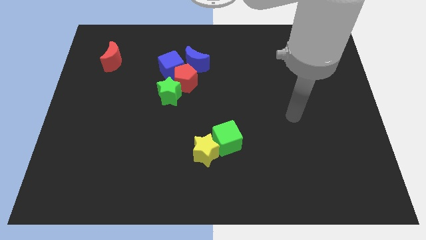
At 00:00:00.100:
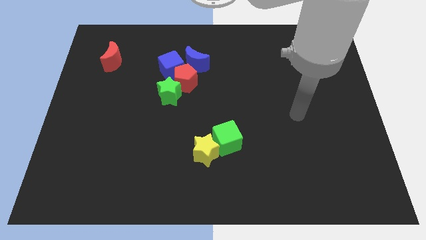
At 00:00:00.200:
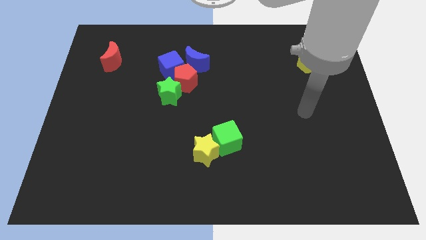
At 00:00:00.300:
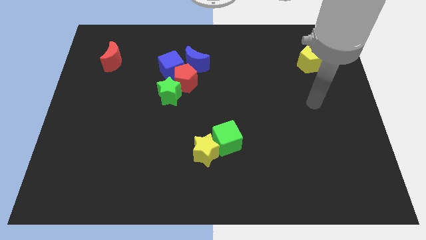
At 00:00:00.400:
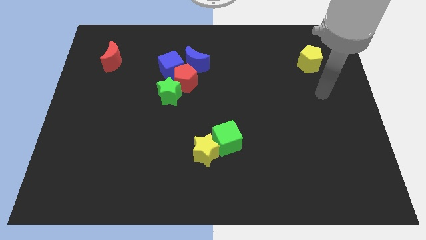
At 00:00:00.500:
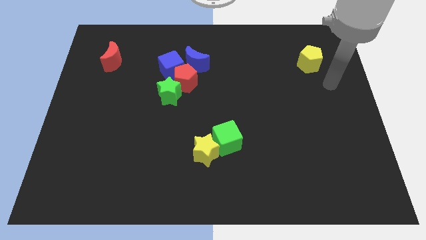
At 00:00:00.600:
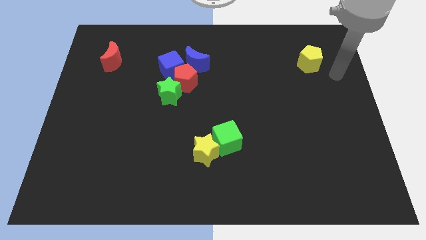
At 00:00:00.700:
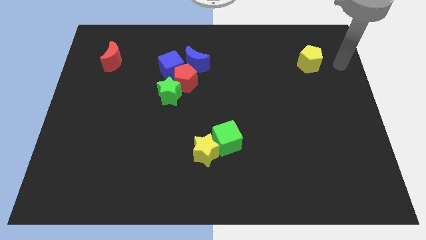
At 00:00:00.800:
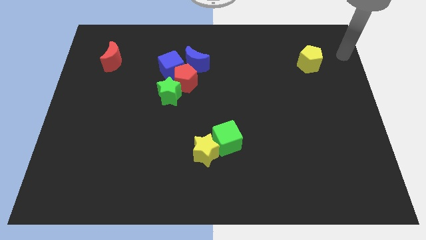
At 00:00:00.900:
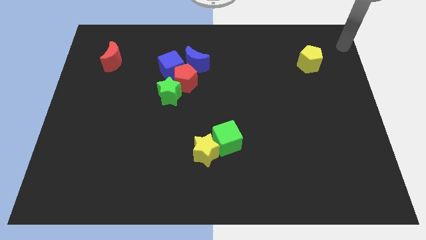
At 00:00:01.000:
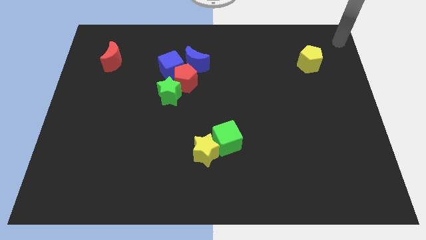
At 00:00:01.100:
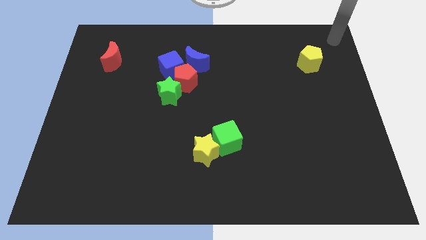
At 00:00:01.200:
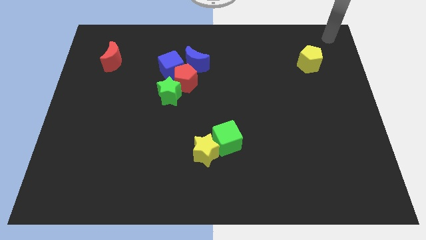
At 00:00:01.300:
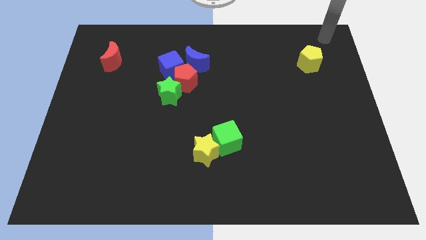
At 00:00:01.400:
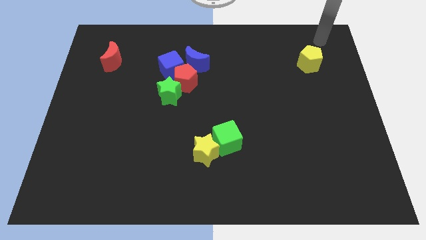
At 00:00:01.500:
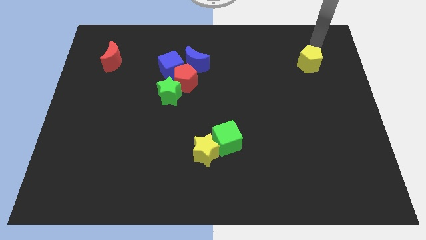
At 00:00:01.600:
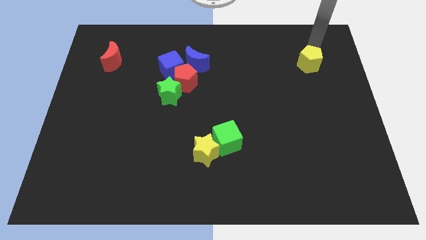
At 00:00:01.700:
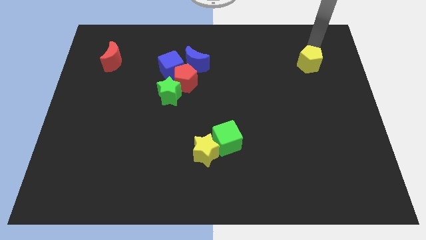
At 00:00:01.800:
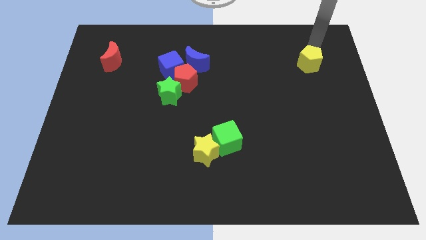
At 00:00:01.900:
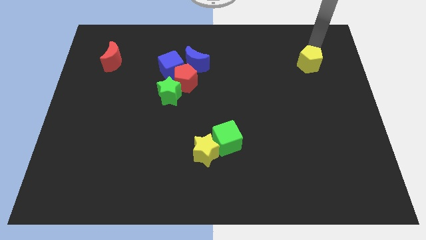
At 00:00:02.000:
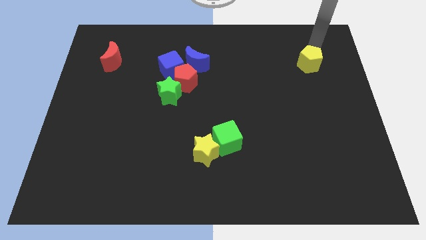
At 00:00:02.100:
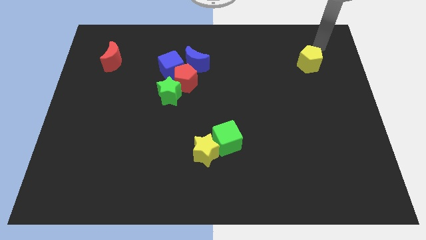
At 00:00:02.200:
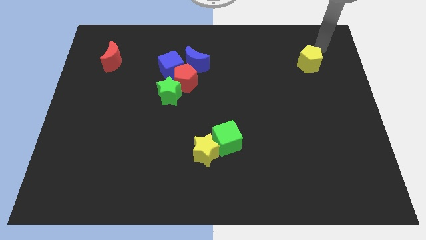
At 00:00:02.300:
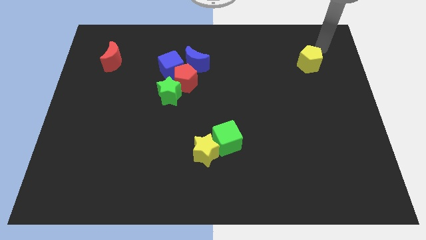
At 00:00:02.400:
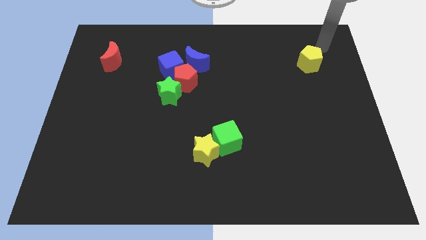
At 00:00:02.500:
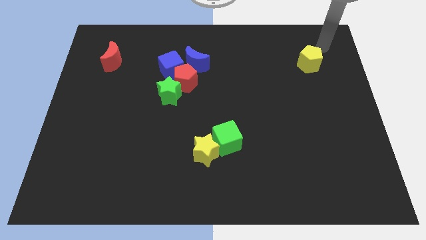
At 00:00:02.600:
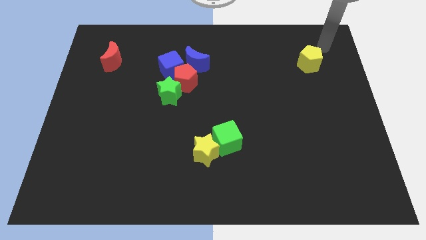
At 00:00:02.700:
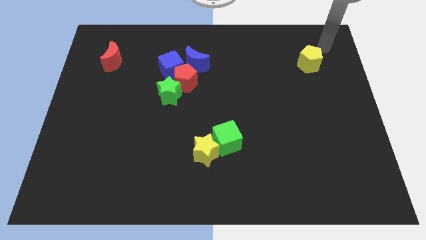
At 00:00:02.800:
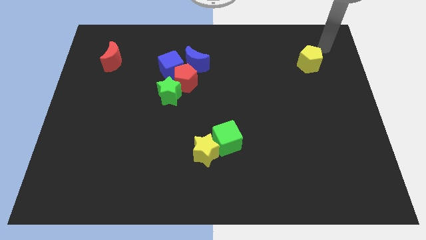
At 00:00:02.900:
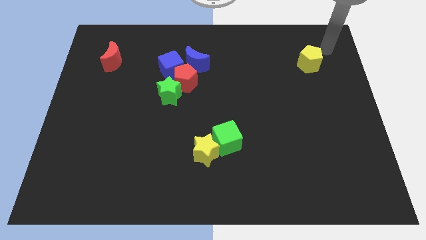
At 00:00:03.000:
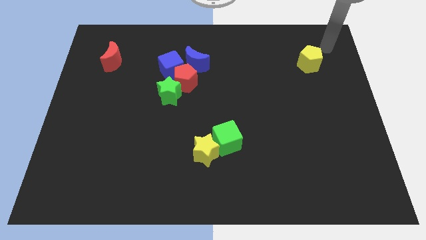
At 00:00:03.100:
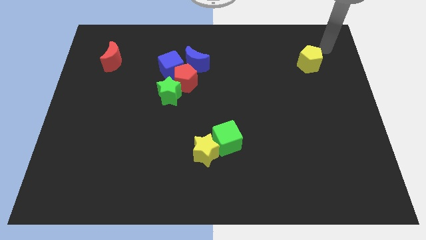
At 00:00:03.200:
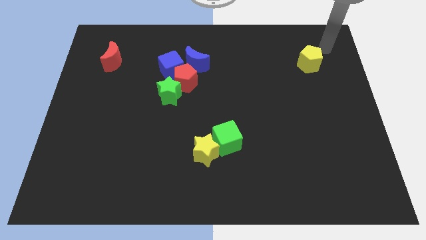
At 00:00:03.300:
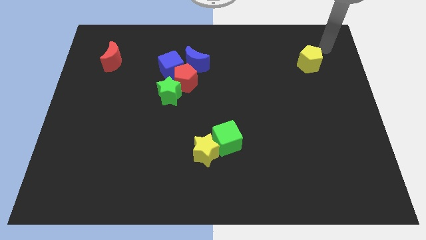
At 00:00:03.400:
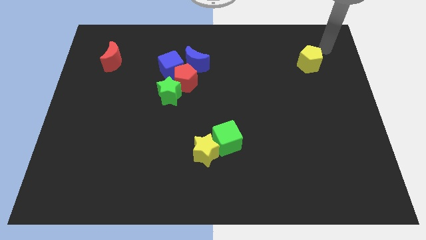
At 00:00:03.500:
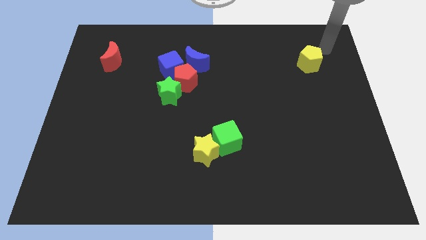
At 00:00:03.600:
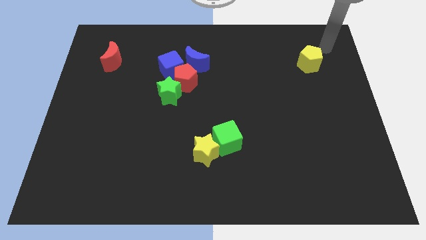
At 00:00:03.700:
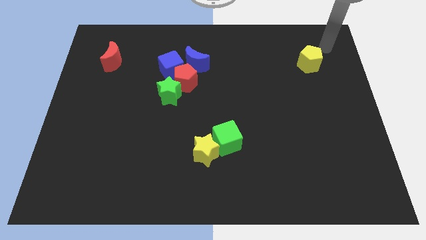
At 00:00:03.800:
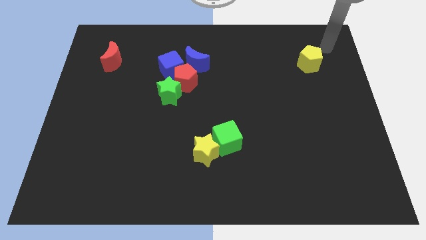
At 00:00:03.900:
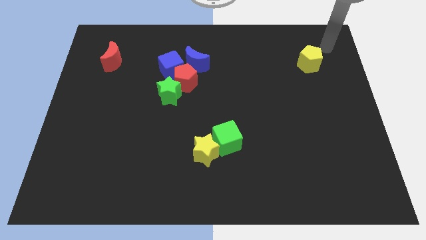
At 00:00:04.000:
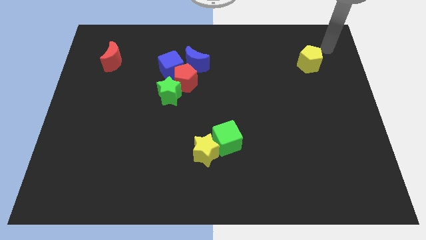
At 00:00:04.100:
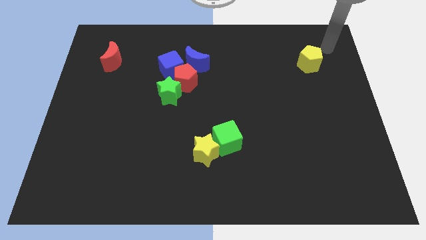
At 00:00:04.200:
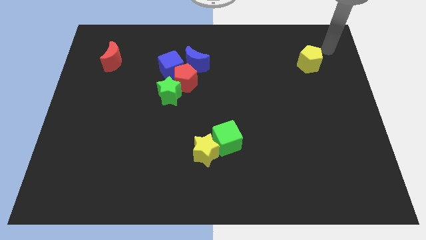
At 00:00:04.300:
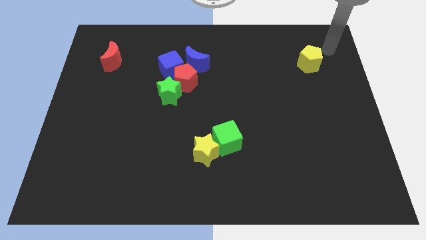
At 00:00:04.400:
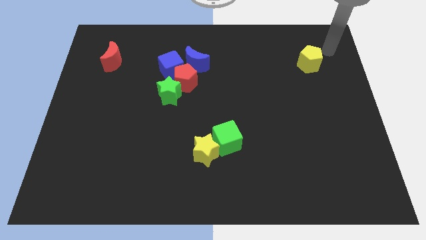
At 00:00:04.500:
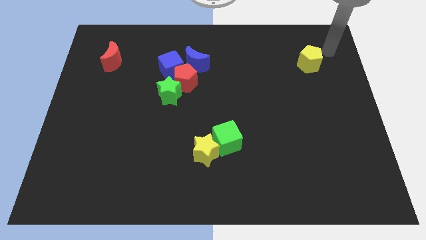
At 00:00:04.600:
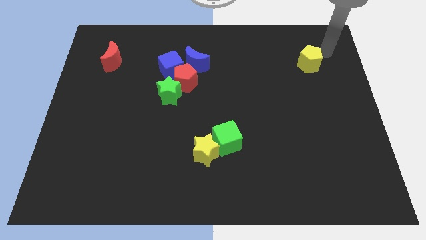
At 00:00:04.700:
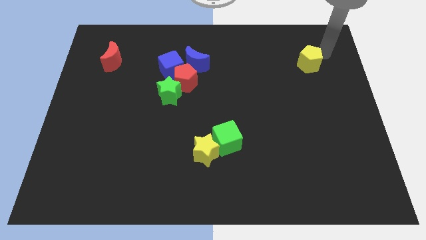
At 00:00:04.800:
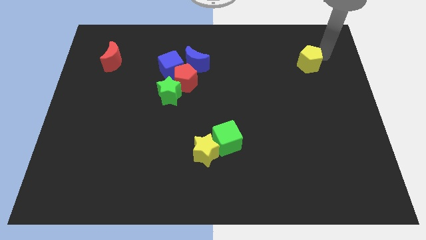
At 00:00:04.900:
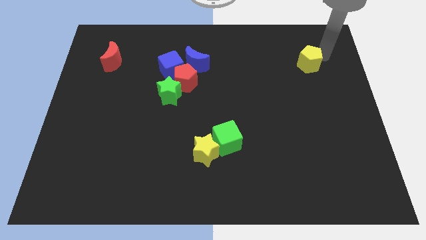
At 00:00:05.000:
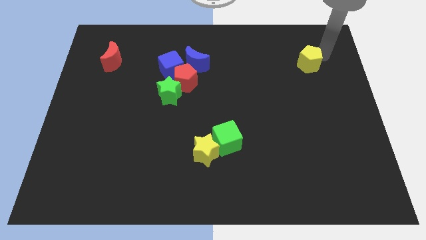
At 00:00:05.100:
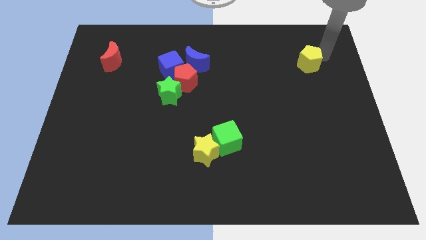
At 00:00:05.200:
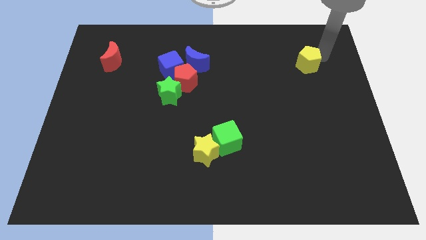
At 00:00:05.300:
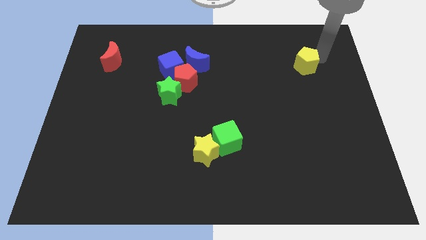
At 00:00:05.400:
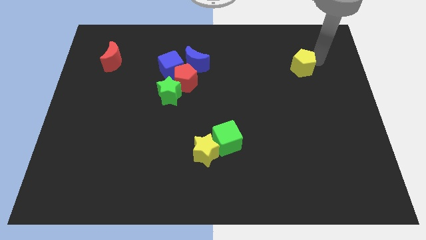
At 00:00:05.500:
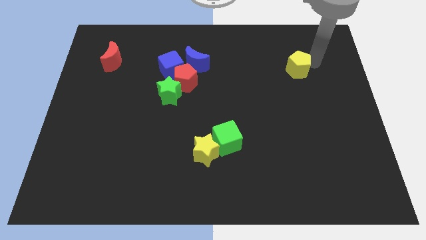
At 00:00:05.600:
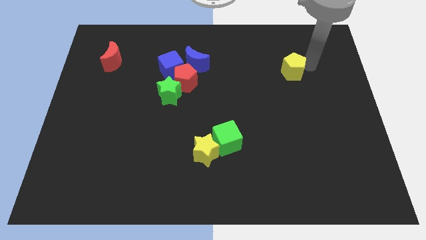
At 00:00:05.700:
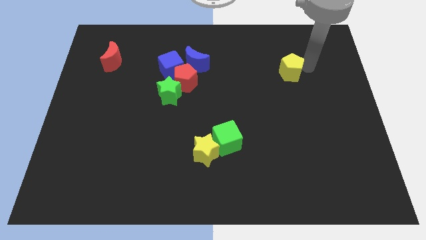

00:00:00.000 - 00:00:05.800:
drag the yellow pentagon slightly to the right of blue moon

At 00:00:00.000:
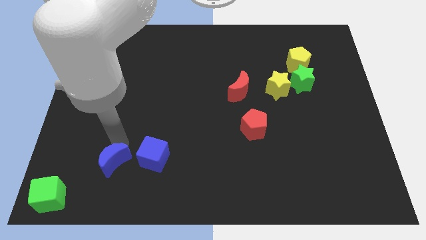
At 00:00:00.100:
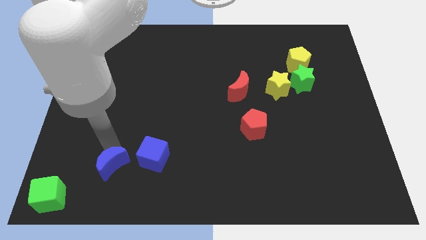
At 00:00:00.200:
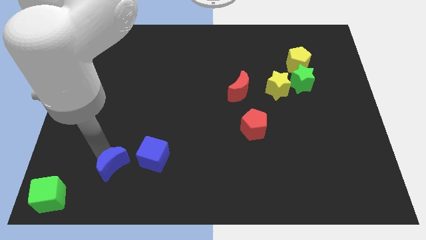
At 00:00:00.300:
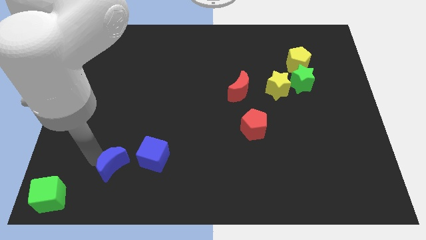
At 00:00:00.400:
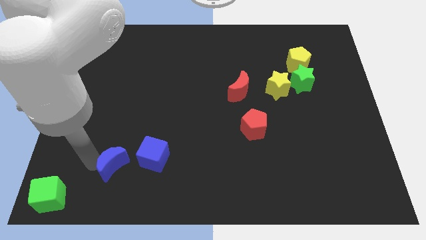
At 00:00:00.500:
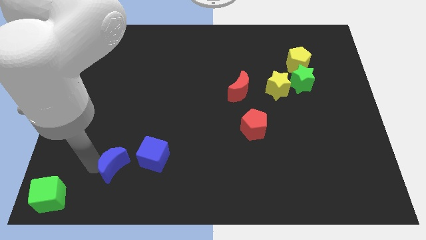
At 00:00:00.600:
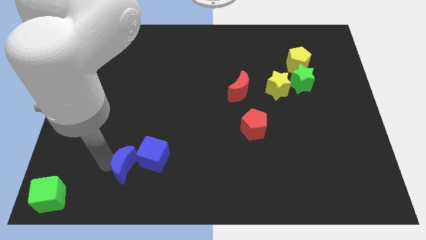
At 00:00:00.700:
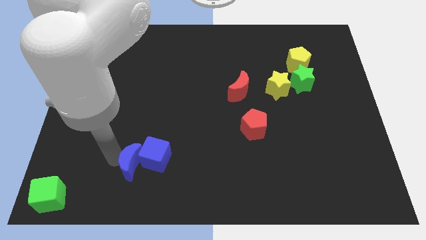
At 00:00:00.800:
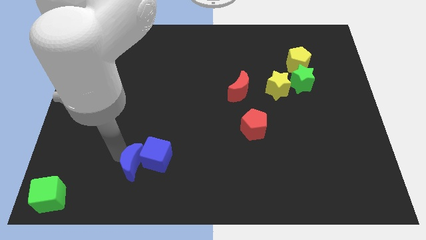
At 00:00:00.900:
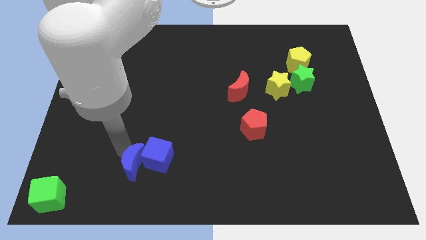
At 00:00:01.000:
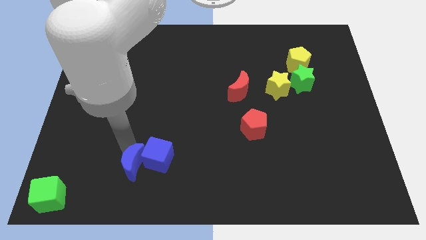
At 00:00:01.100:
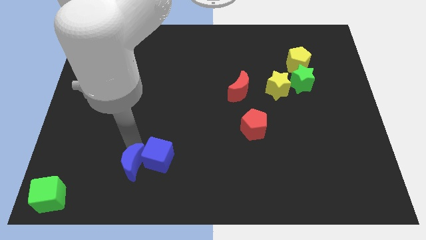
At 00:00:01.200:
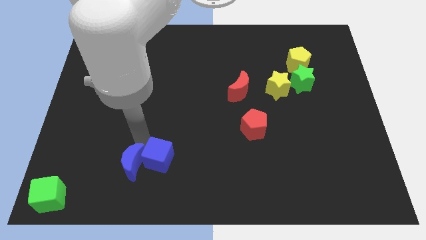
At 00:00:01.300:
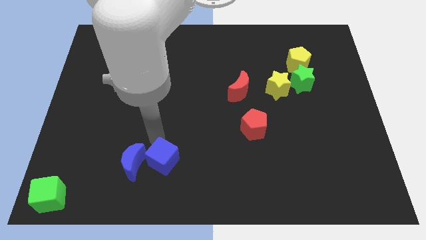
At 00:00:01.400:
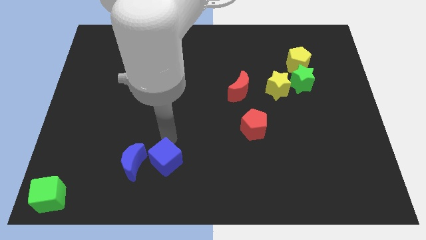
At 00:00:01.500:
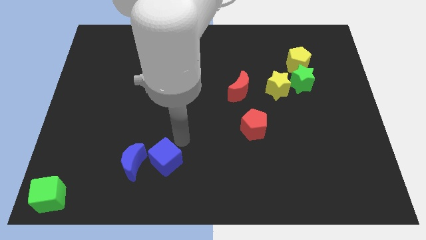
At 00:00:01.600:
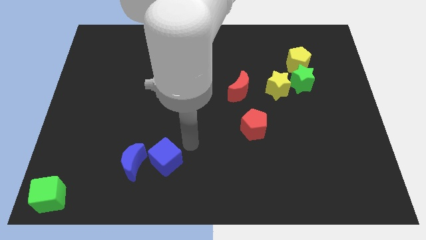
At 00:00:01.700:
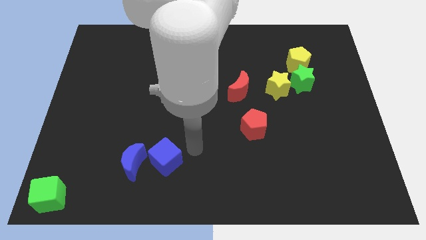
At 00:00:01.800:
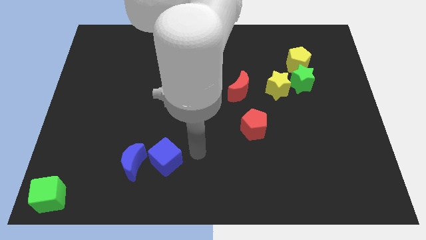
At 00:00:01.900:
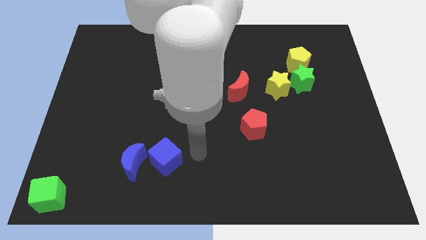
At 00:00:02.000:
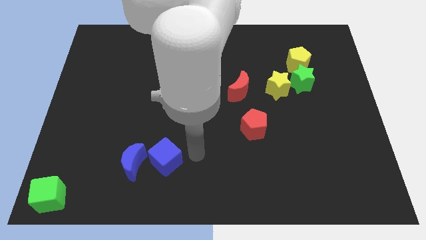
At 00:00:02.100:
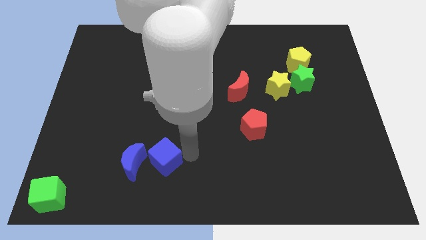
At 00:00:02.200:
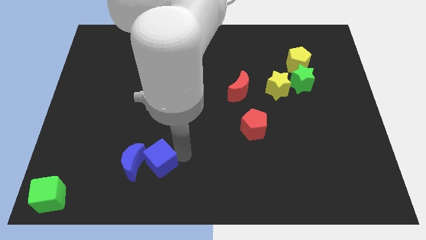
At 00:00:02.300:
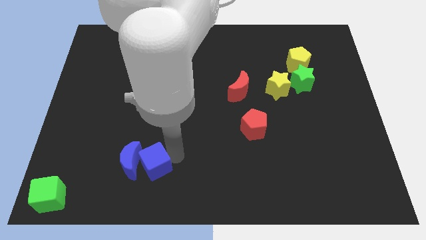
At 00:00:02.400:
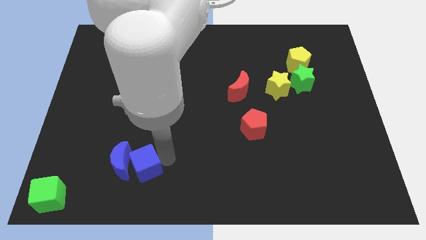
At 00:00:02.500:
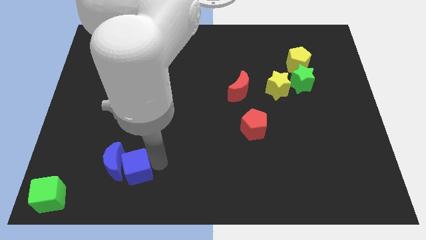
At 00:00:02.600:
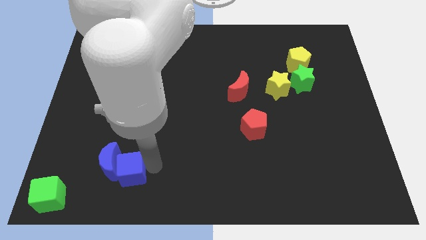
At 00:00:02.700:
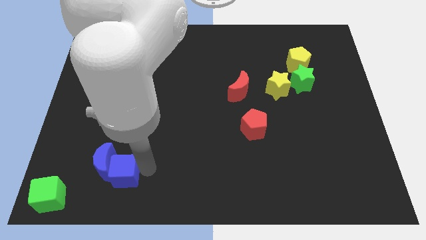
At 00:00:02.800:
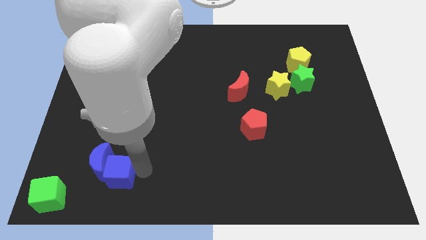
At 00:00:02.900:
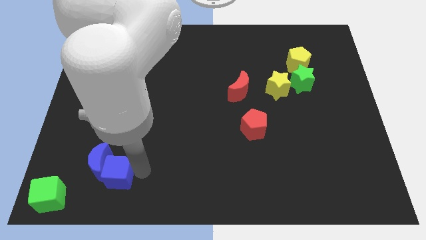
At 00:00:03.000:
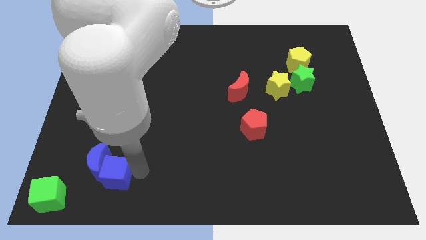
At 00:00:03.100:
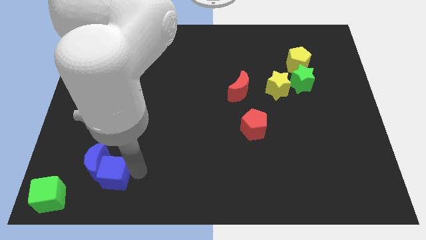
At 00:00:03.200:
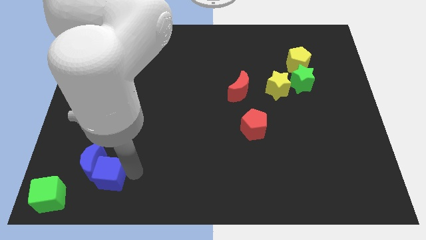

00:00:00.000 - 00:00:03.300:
push the blue moon into the blue cube towards the bottom side
